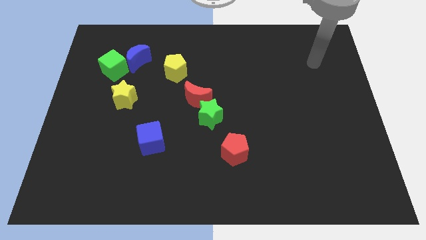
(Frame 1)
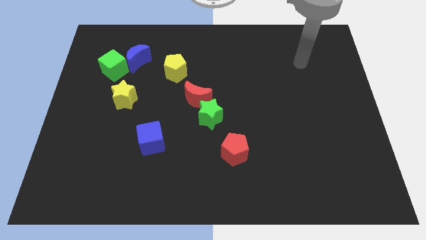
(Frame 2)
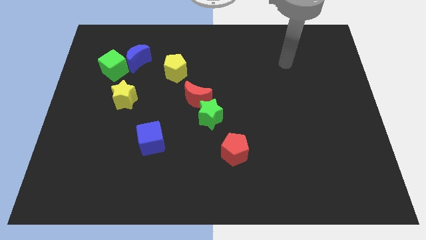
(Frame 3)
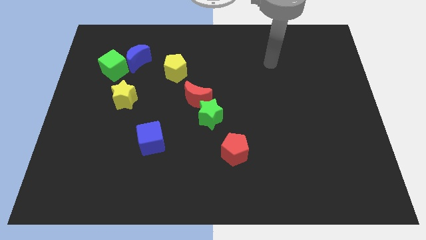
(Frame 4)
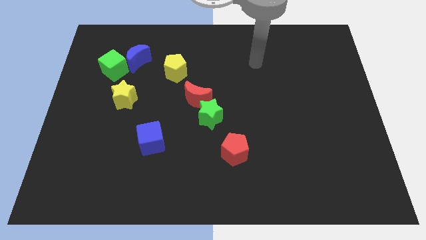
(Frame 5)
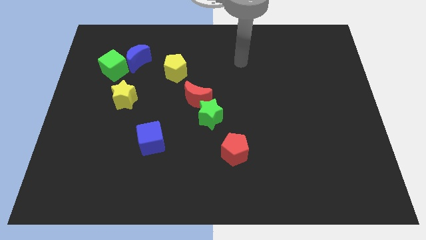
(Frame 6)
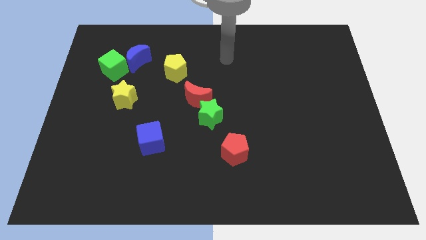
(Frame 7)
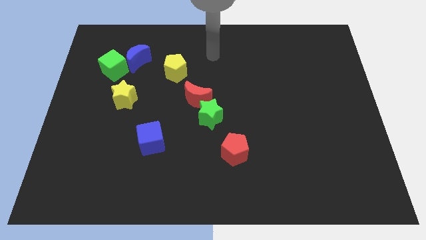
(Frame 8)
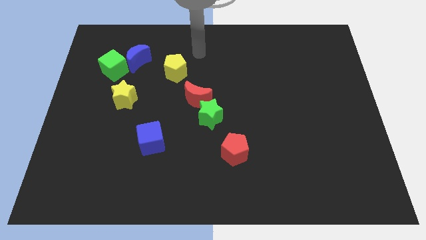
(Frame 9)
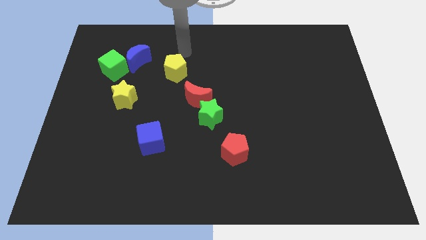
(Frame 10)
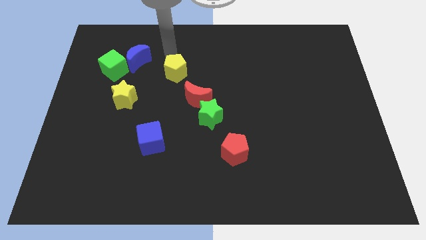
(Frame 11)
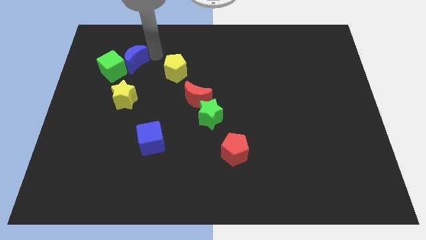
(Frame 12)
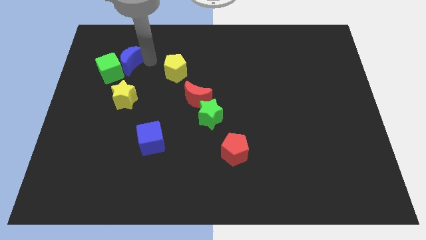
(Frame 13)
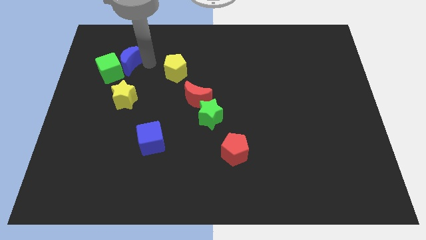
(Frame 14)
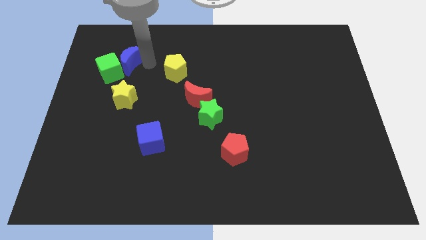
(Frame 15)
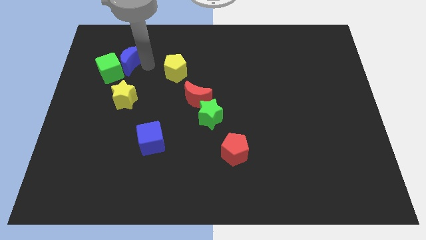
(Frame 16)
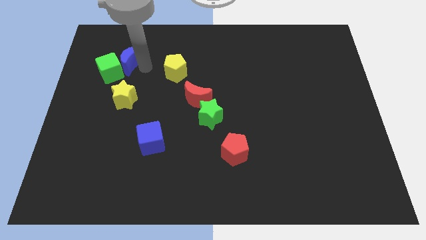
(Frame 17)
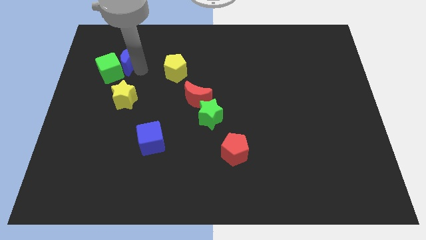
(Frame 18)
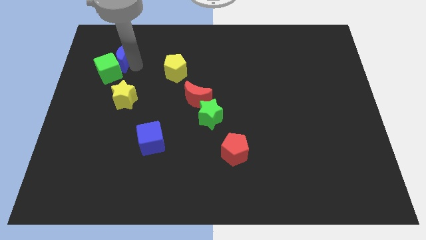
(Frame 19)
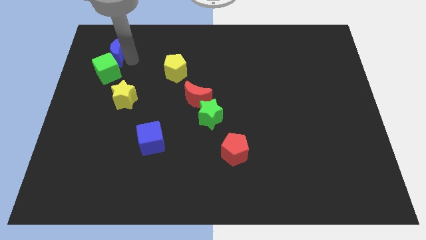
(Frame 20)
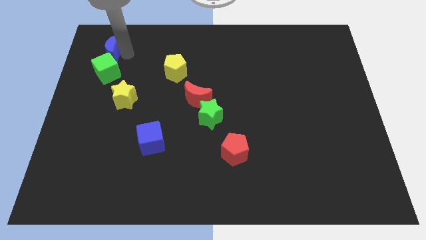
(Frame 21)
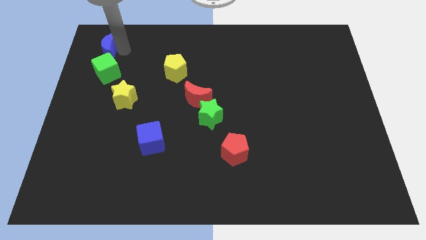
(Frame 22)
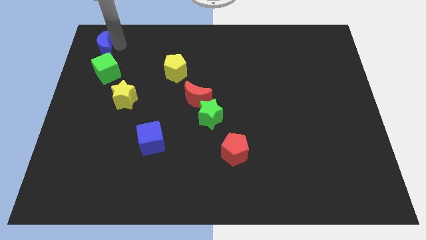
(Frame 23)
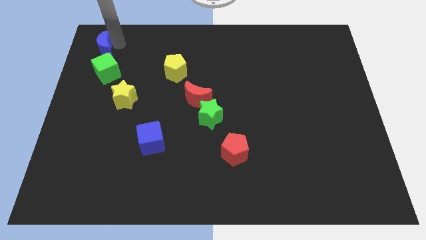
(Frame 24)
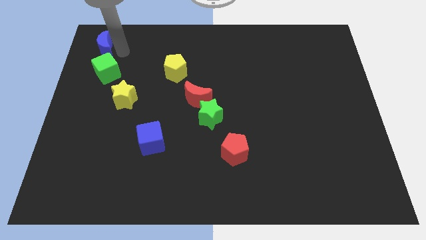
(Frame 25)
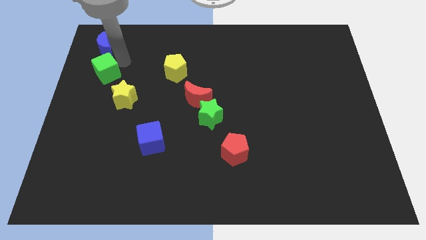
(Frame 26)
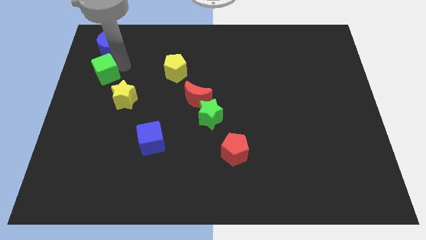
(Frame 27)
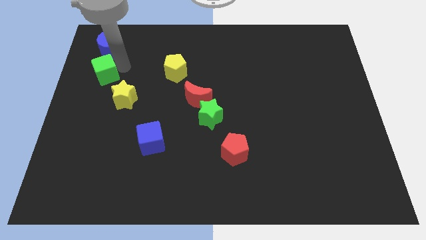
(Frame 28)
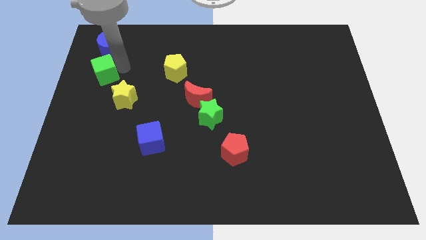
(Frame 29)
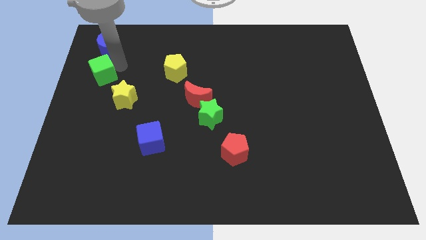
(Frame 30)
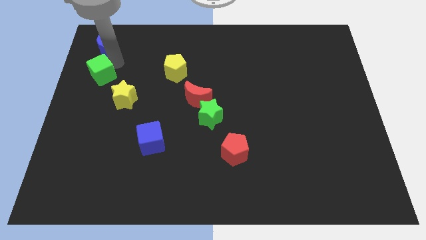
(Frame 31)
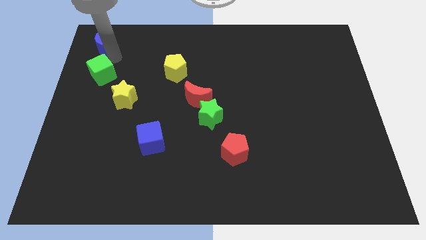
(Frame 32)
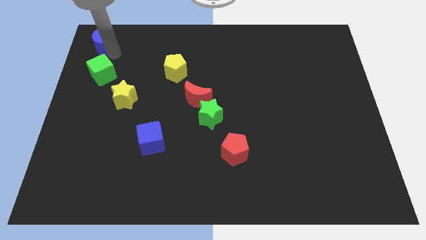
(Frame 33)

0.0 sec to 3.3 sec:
move the blue moon to the top side of the green cube

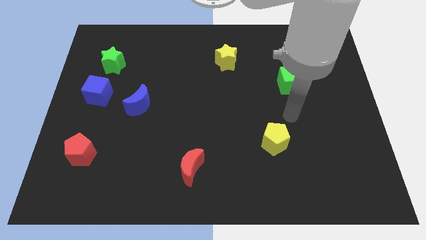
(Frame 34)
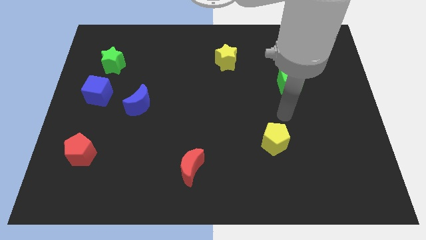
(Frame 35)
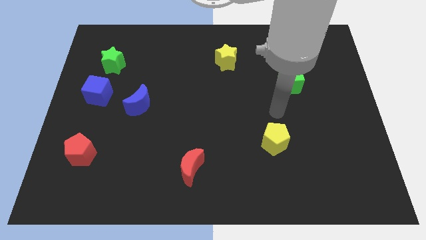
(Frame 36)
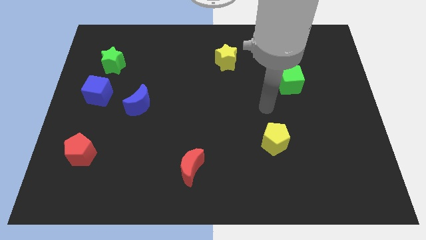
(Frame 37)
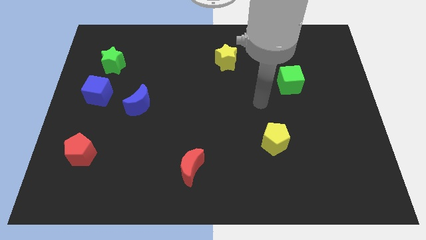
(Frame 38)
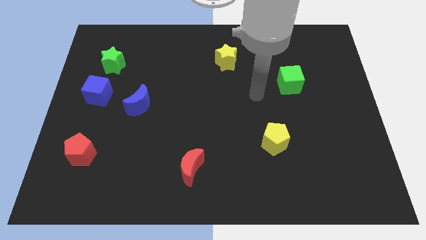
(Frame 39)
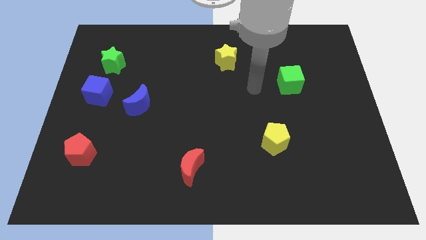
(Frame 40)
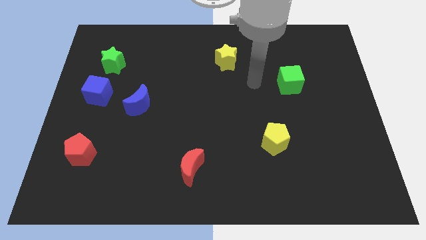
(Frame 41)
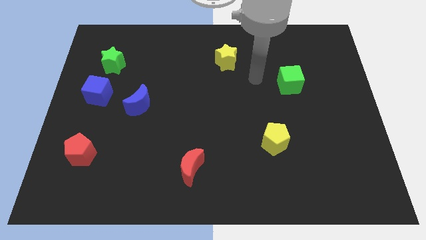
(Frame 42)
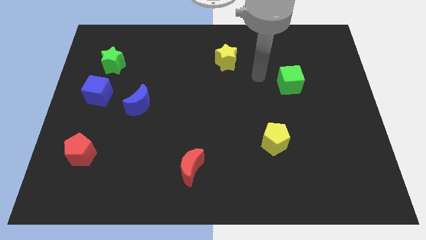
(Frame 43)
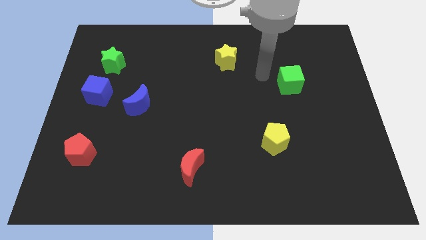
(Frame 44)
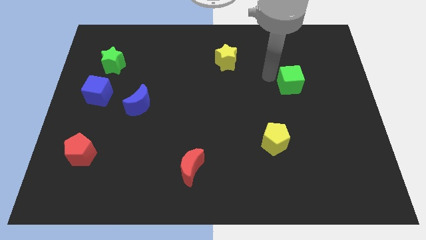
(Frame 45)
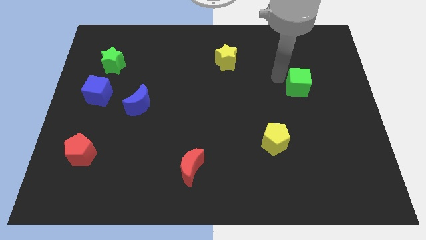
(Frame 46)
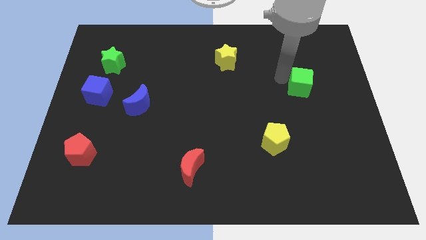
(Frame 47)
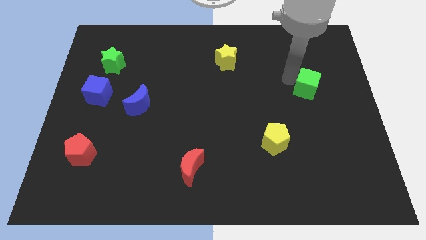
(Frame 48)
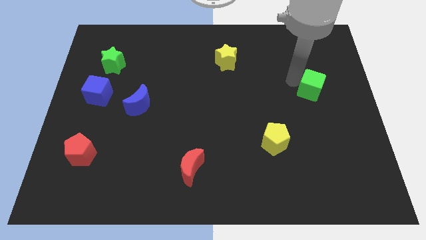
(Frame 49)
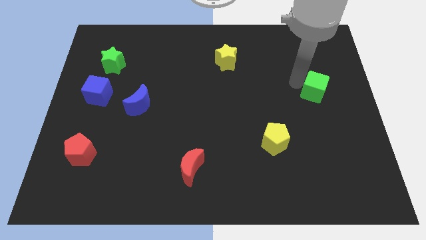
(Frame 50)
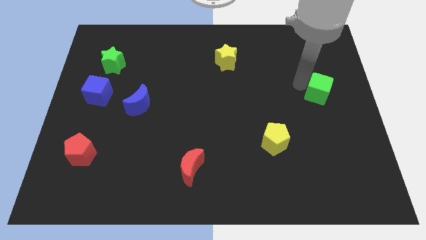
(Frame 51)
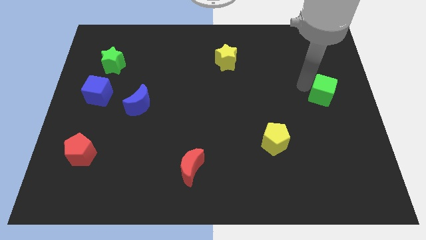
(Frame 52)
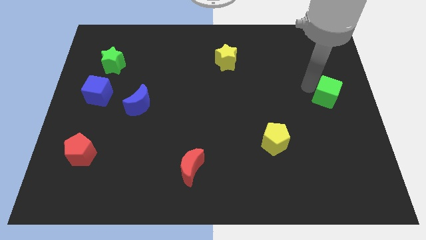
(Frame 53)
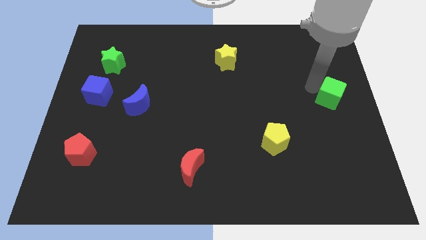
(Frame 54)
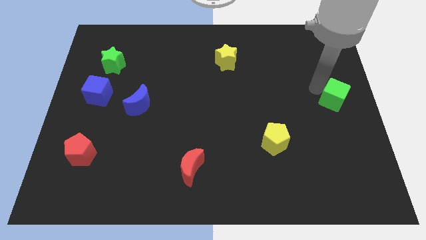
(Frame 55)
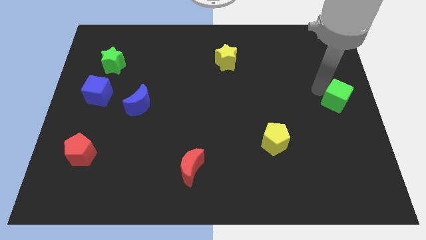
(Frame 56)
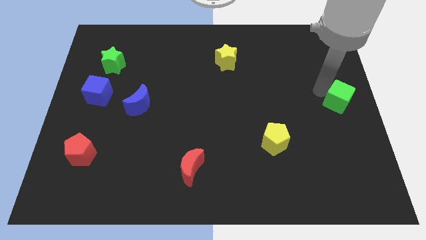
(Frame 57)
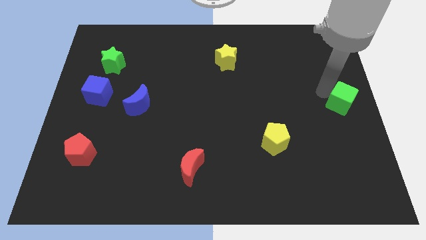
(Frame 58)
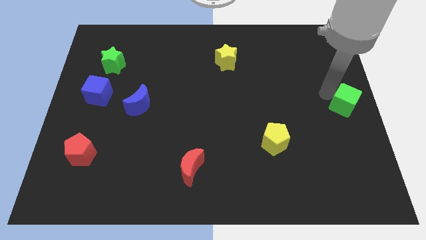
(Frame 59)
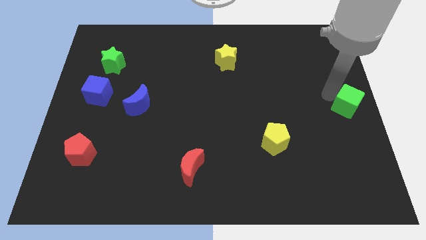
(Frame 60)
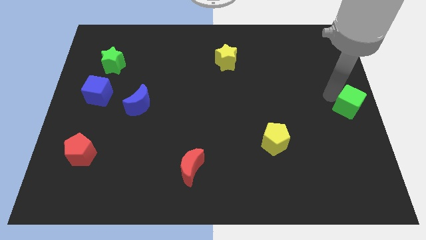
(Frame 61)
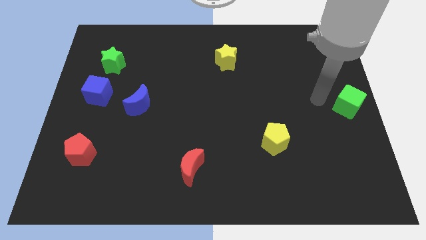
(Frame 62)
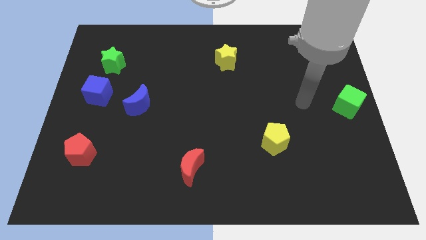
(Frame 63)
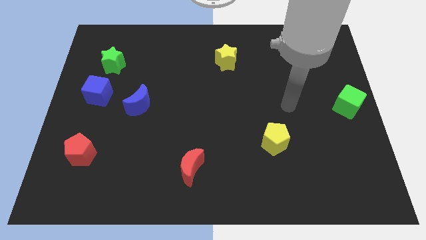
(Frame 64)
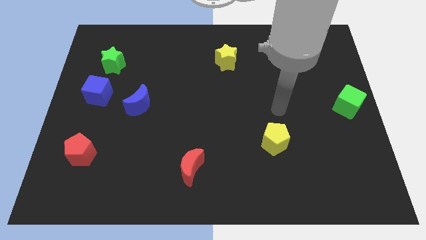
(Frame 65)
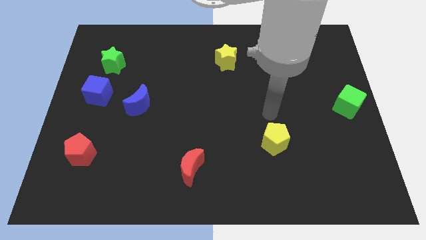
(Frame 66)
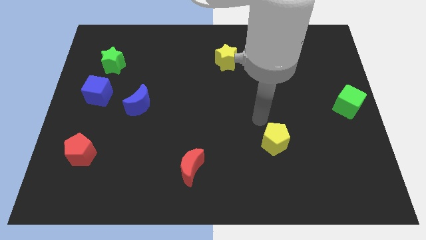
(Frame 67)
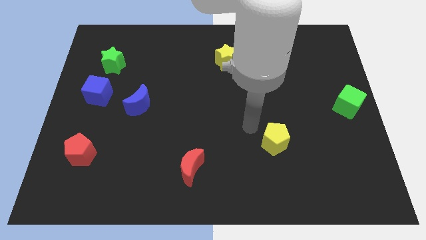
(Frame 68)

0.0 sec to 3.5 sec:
move the green cube to the right side of the board

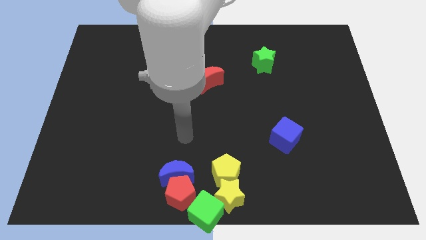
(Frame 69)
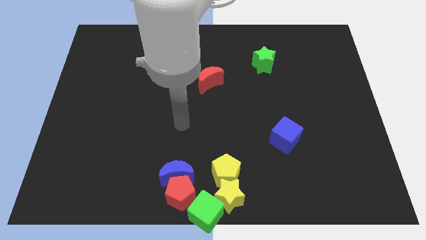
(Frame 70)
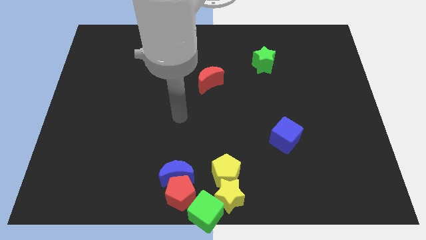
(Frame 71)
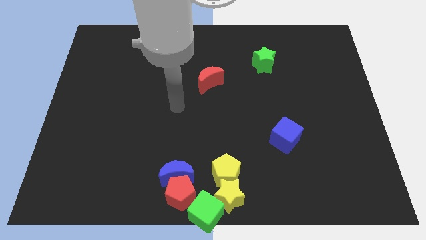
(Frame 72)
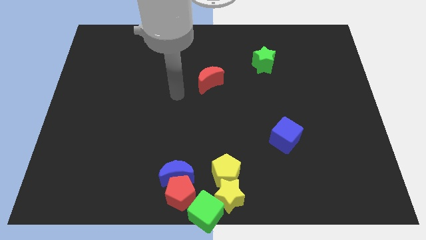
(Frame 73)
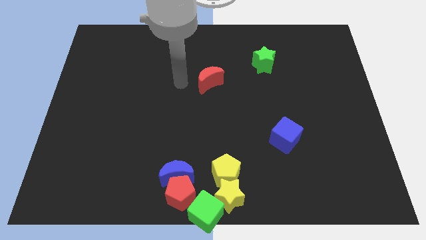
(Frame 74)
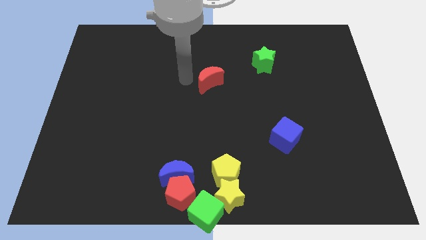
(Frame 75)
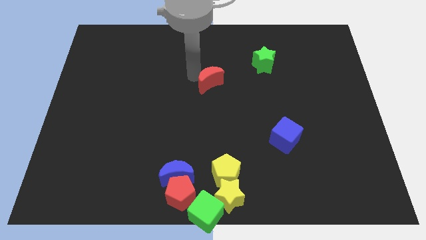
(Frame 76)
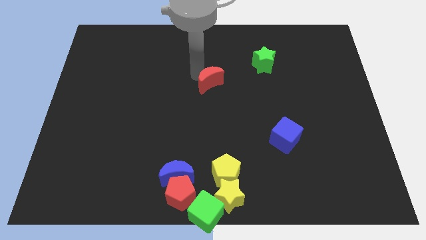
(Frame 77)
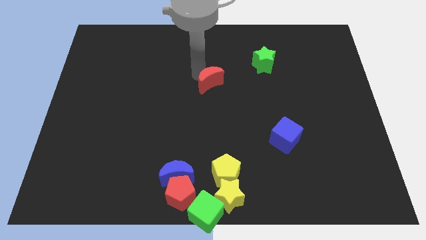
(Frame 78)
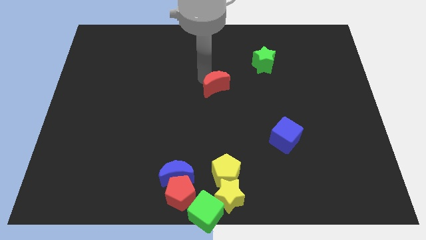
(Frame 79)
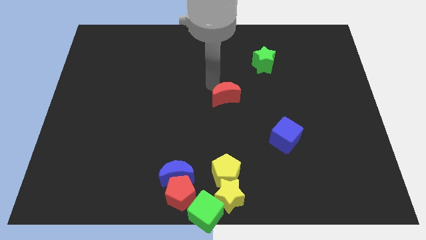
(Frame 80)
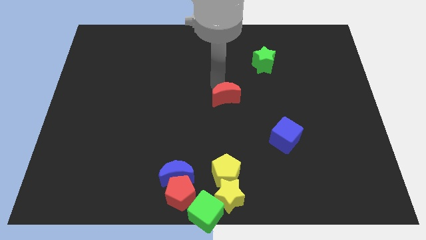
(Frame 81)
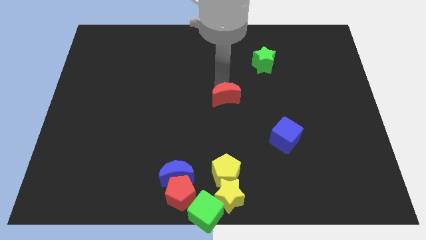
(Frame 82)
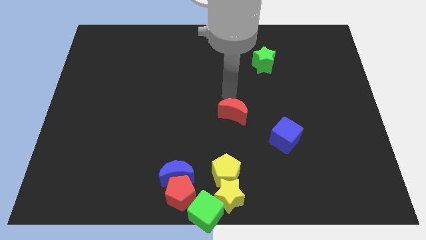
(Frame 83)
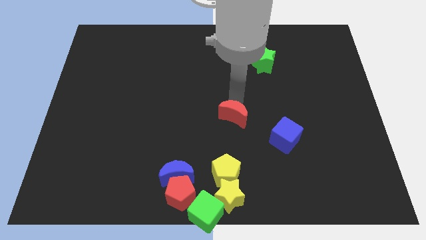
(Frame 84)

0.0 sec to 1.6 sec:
place red crescent left to the blue cube

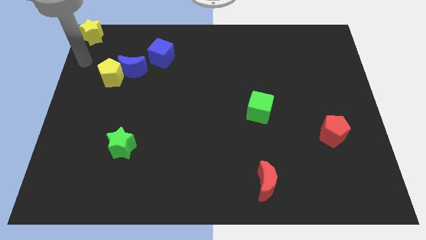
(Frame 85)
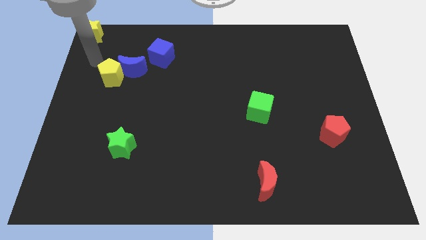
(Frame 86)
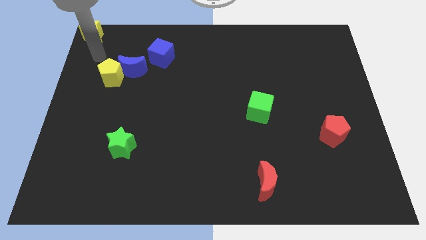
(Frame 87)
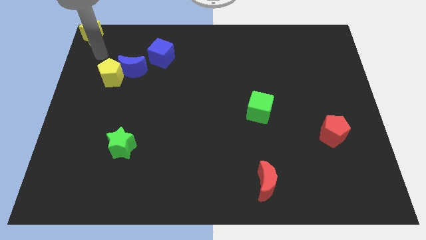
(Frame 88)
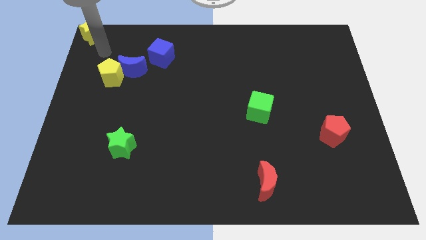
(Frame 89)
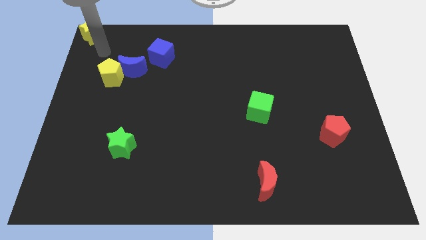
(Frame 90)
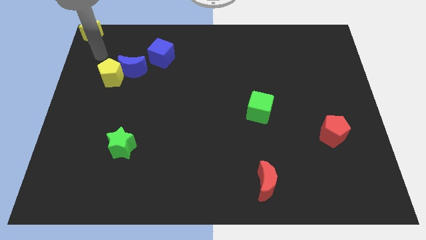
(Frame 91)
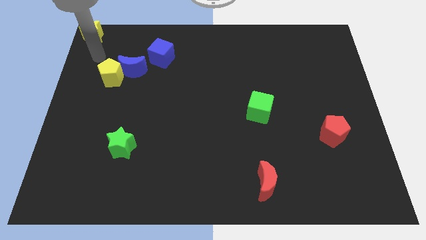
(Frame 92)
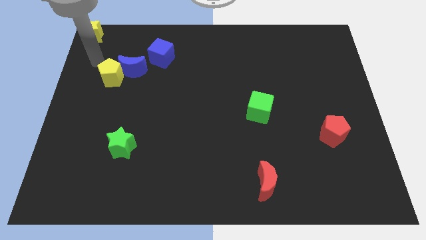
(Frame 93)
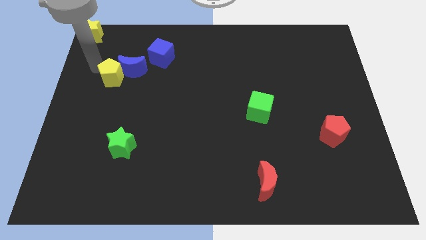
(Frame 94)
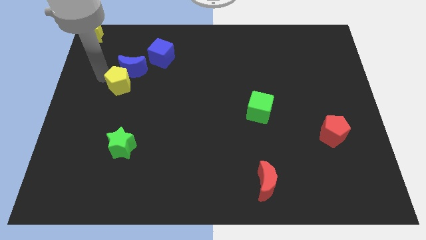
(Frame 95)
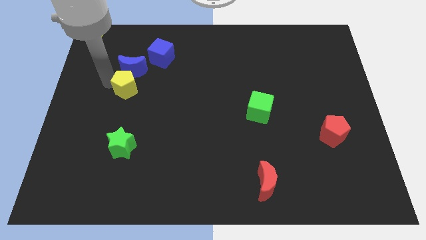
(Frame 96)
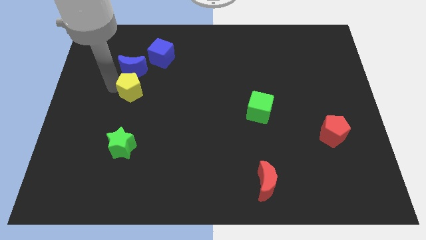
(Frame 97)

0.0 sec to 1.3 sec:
slide the yellow pentagon below to the blue moon
